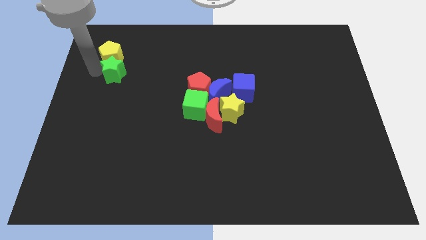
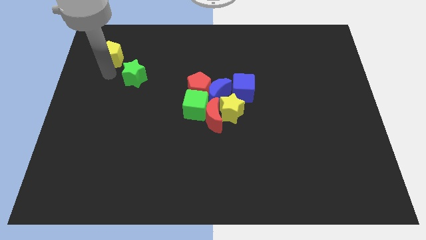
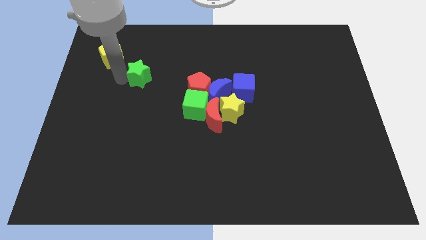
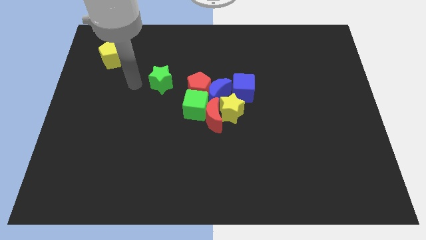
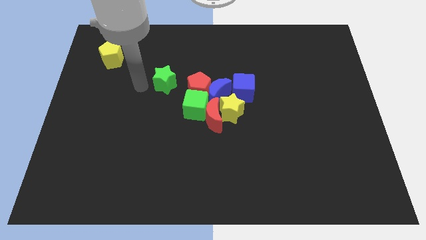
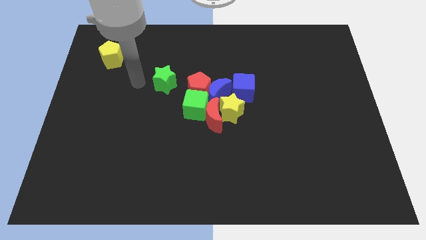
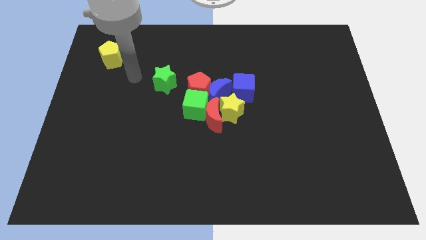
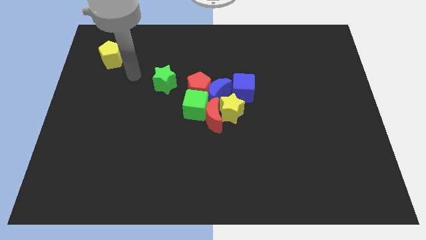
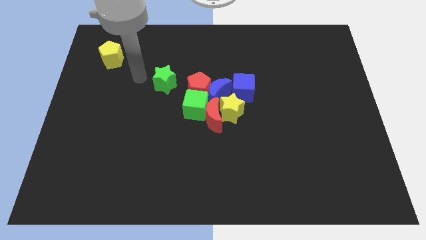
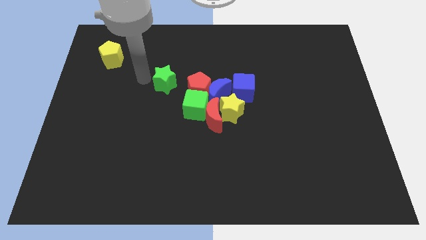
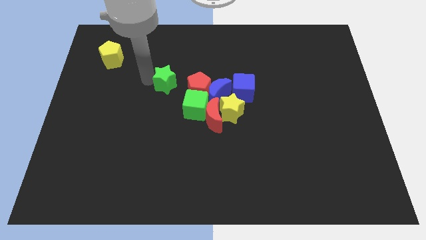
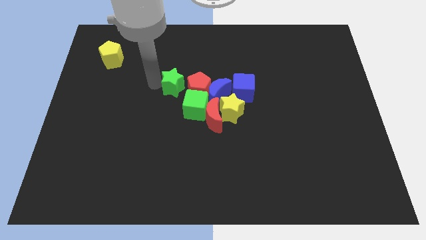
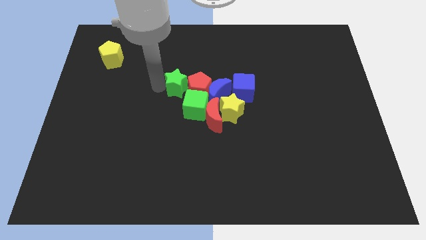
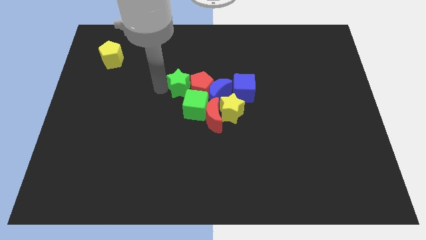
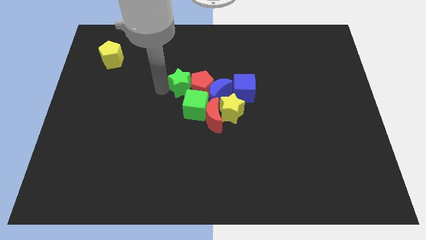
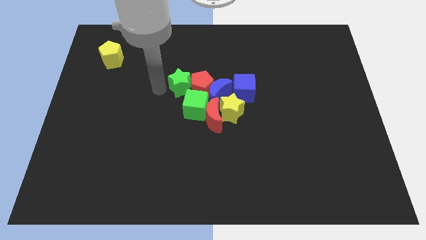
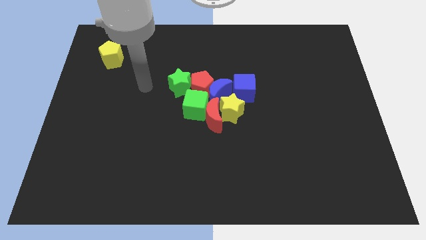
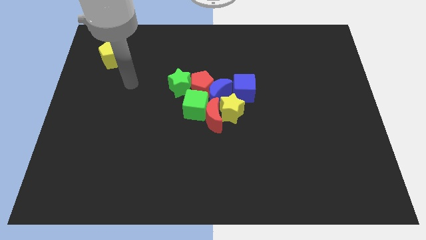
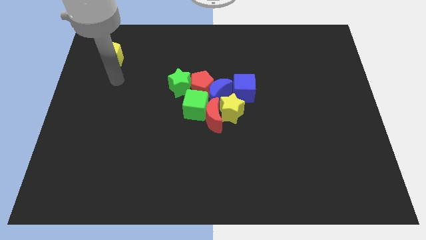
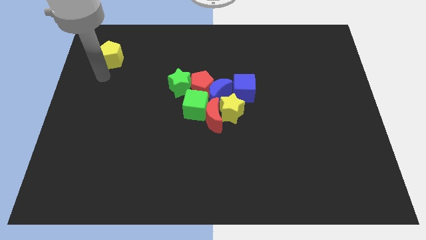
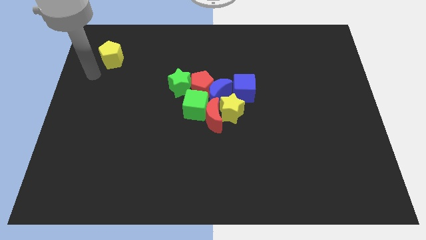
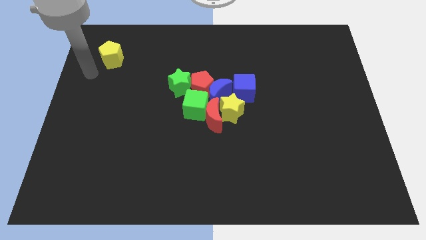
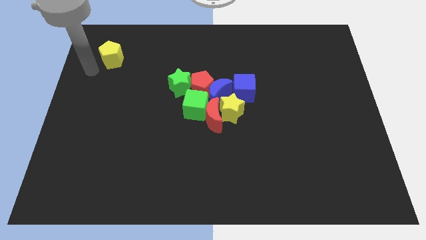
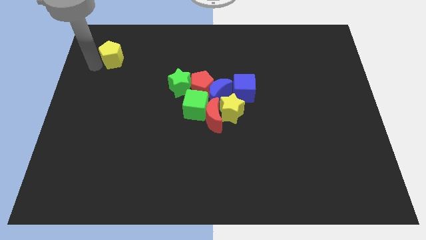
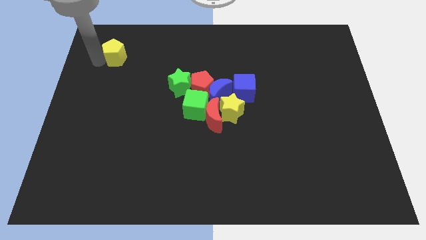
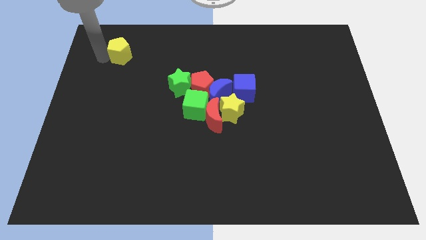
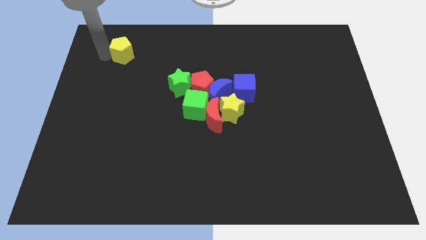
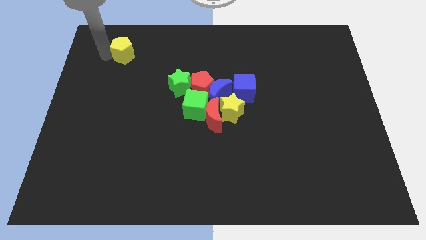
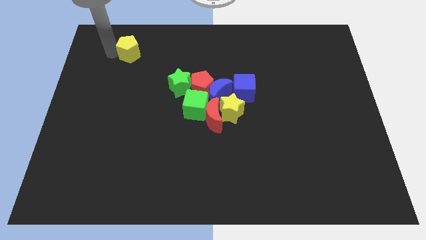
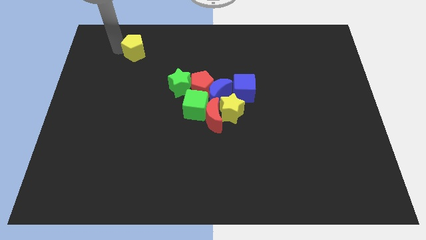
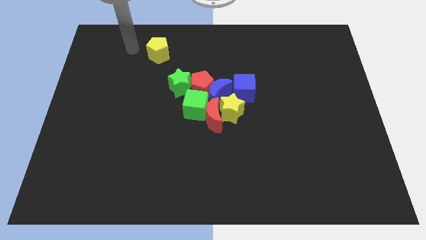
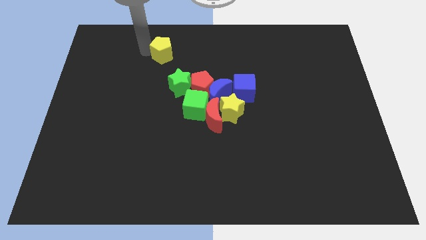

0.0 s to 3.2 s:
push the green star into the red pentagon

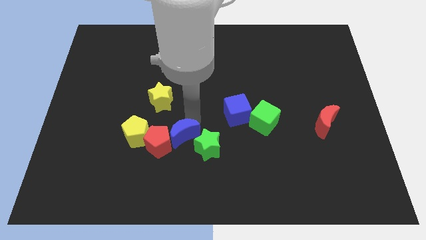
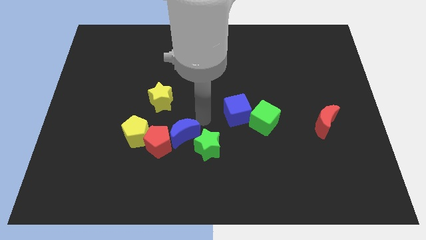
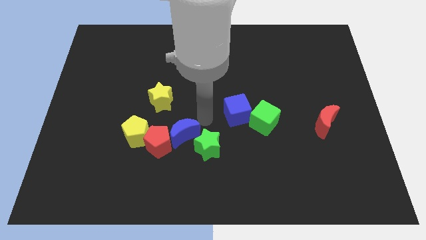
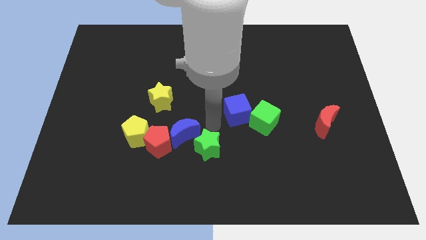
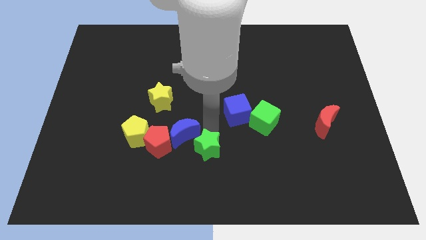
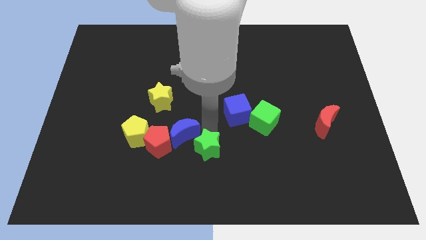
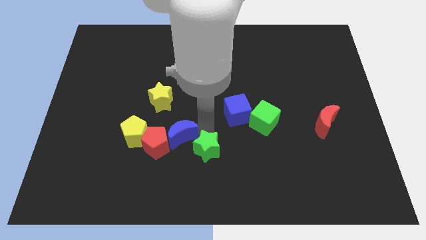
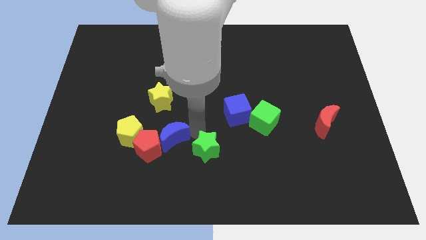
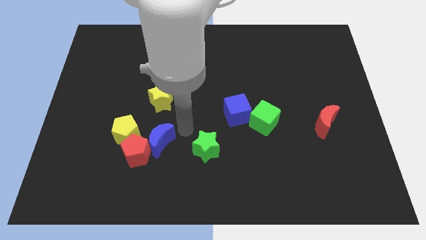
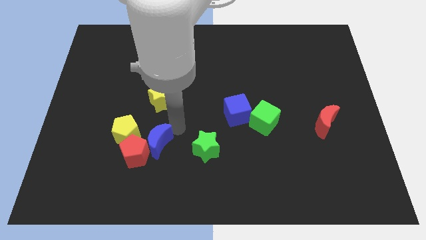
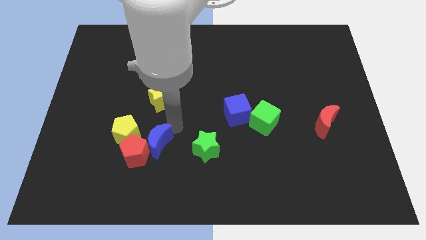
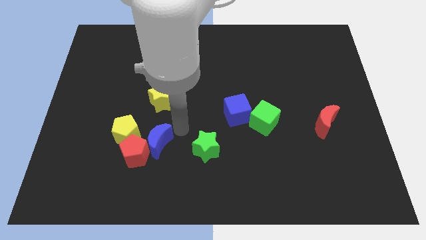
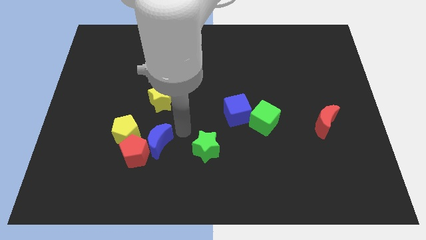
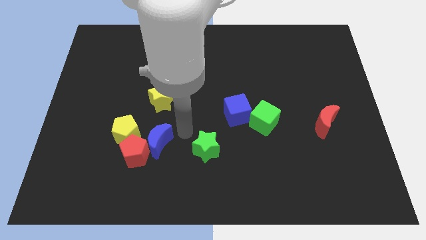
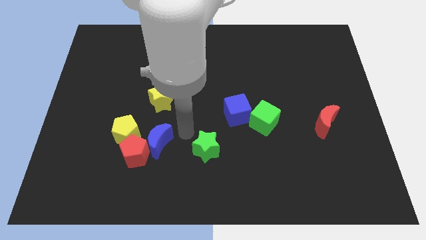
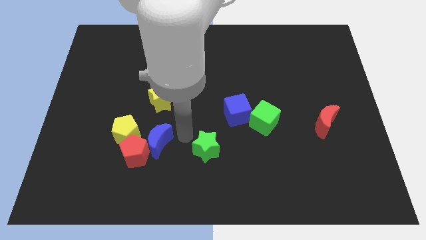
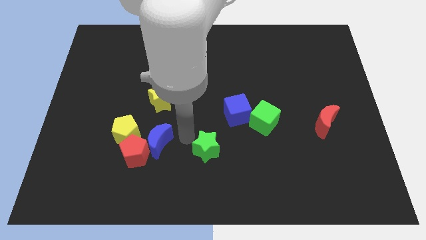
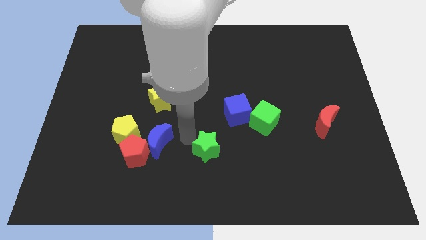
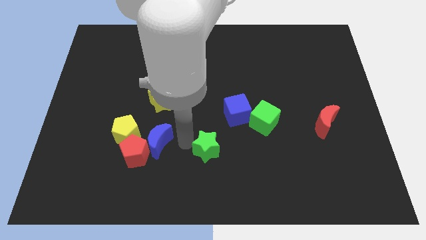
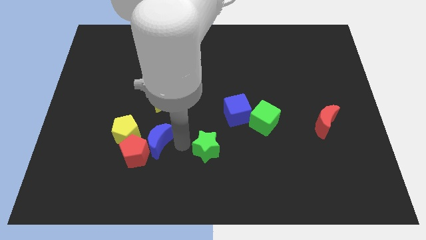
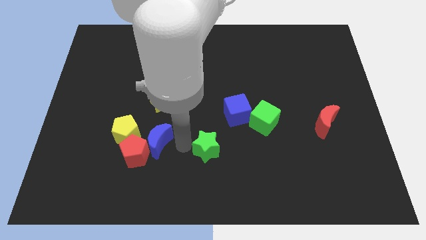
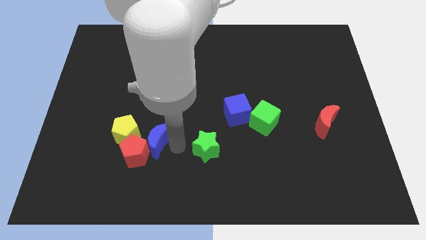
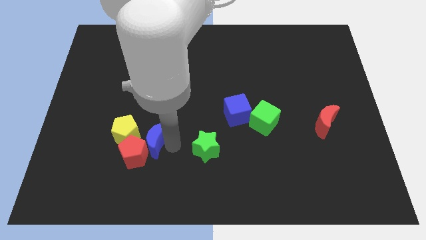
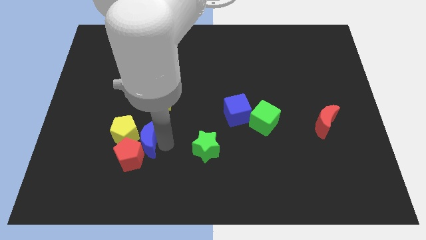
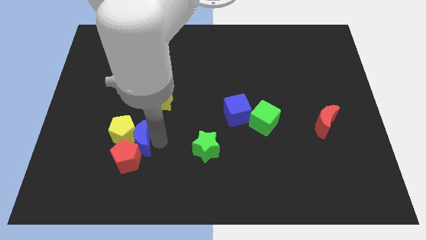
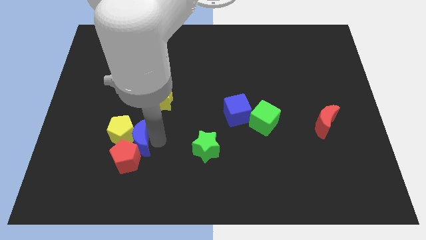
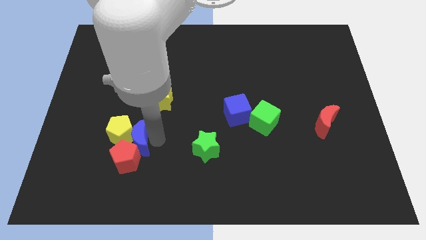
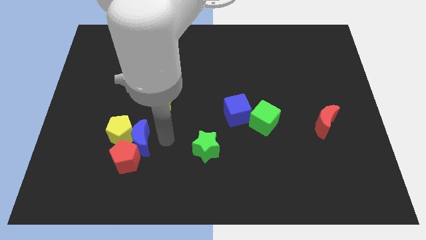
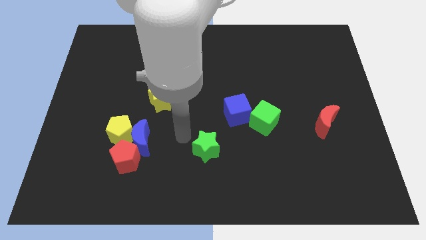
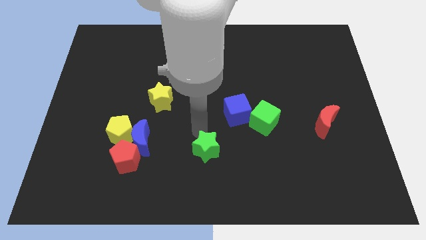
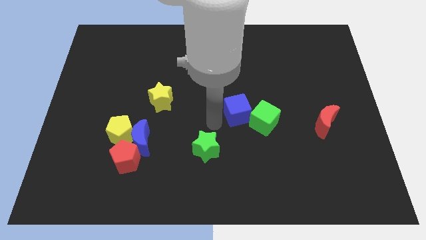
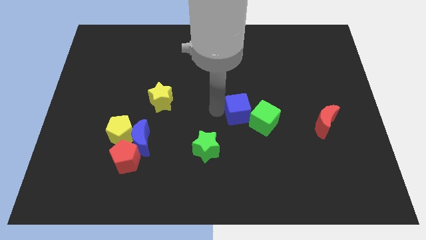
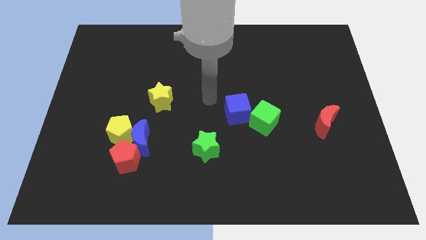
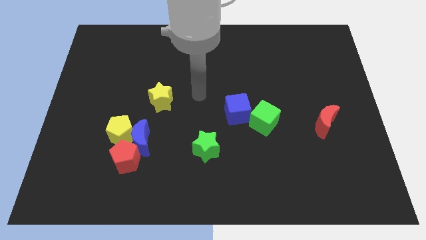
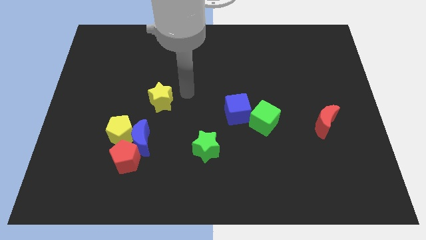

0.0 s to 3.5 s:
place blue crescent on right side of yellow and red pentagon

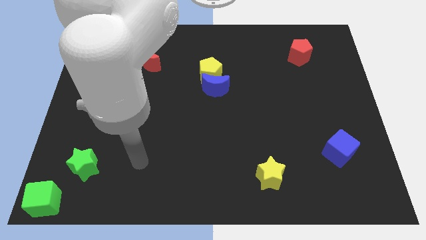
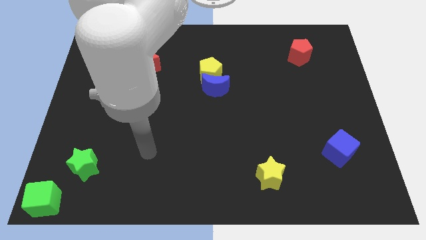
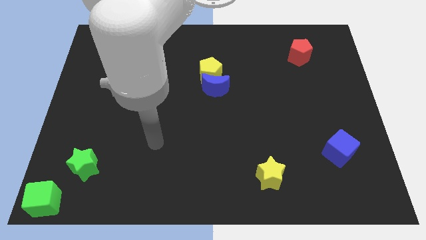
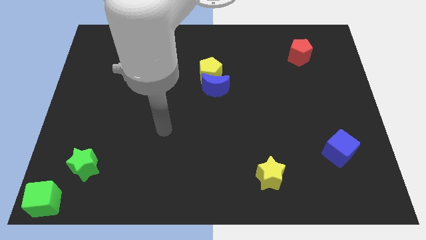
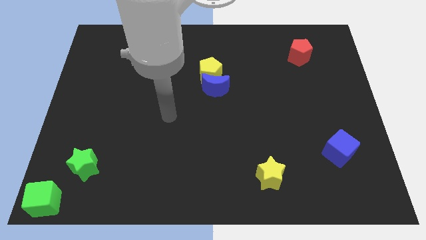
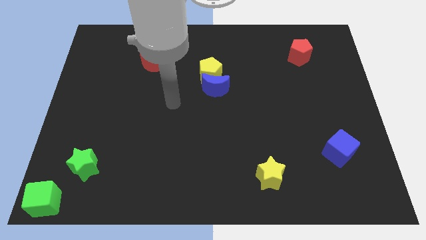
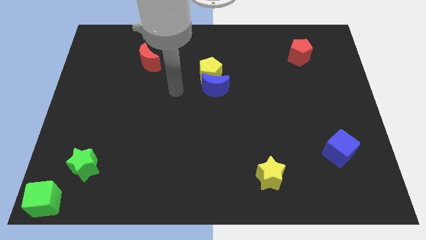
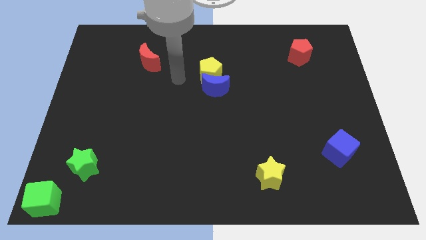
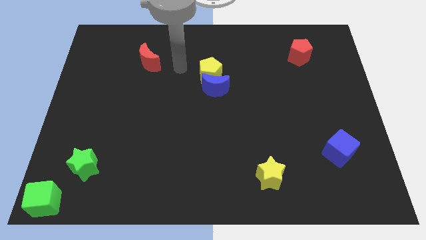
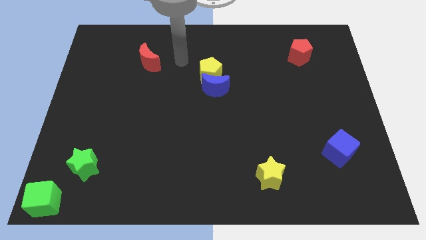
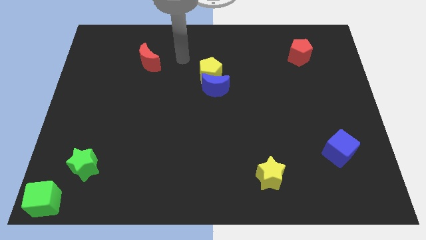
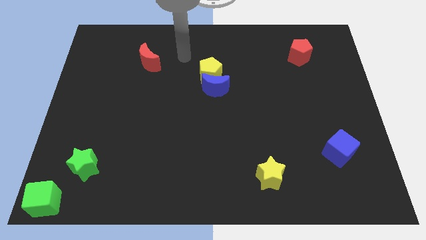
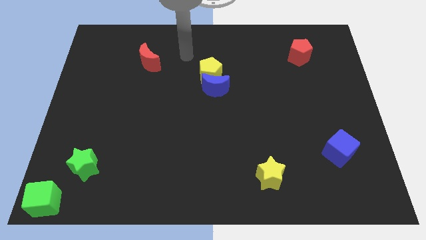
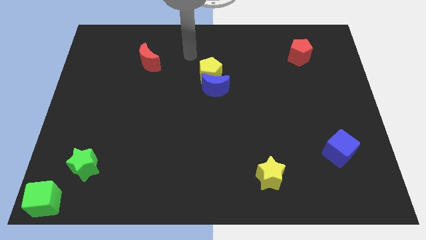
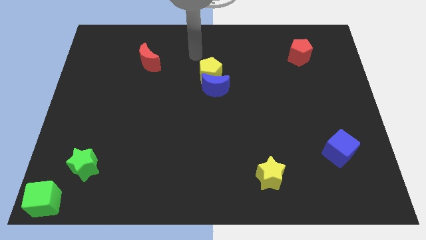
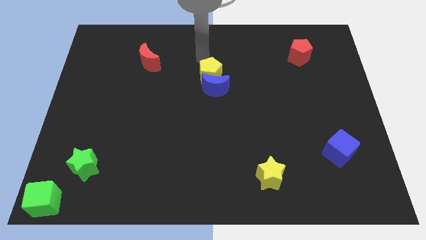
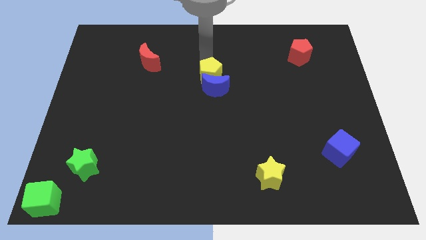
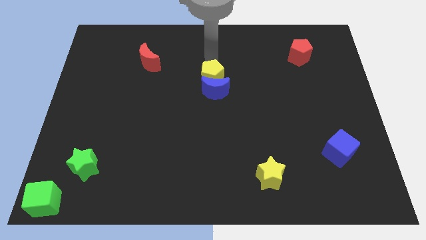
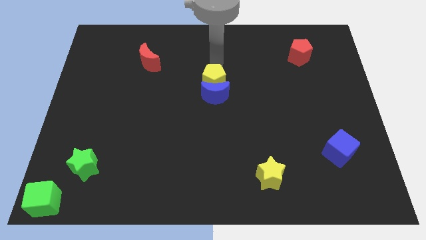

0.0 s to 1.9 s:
move your arm to the top of the yellow pentagon
